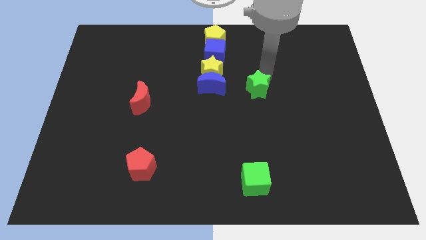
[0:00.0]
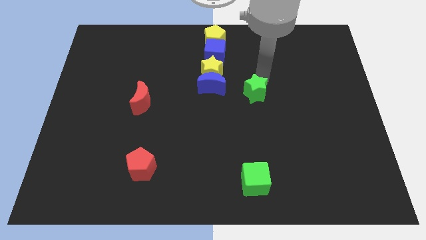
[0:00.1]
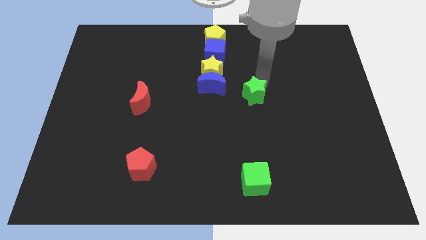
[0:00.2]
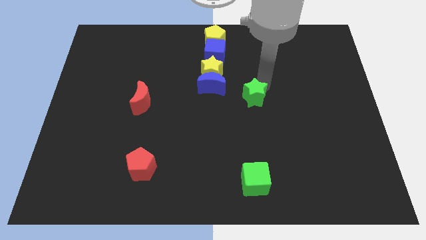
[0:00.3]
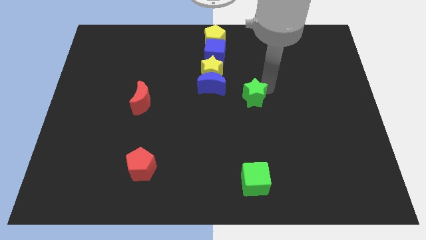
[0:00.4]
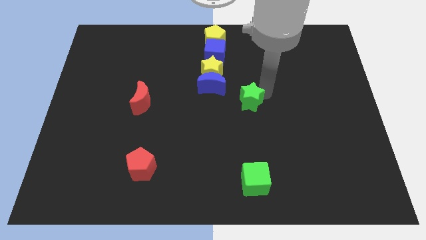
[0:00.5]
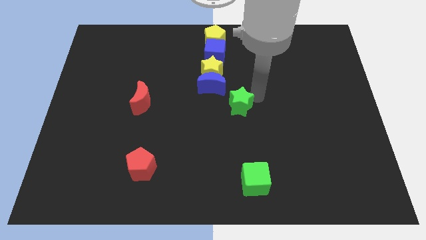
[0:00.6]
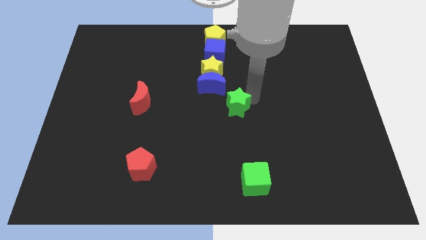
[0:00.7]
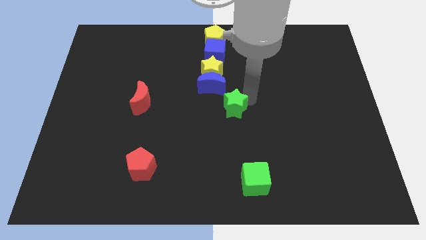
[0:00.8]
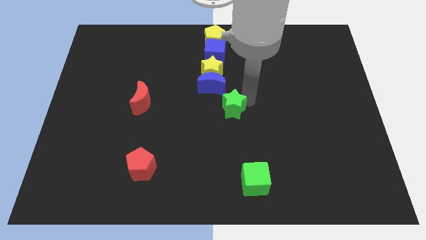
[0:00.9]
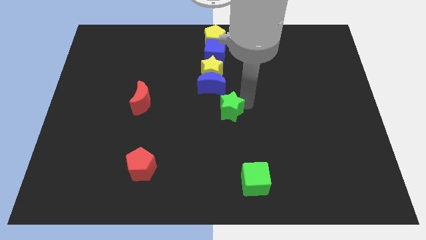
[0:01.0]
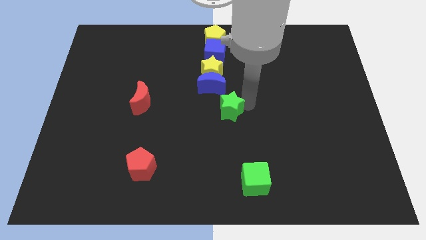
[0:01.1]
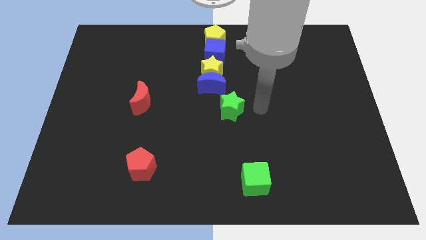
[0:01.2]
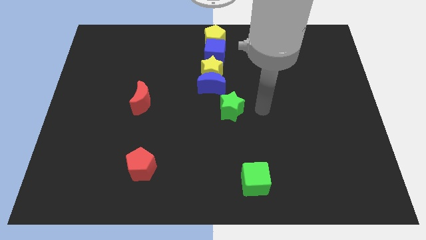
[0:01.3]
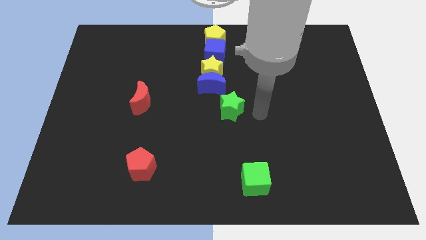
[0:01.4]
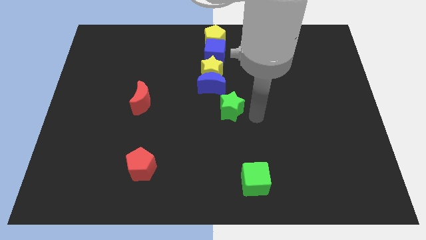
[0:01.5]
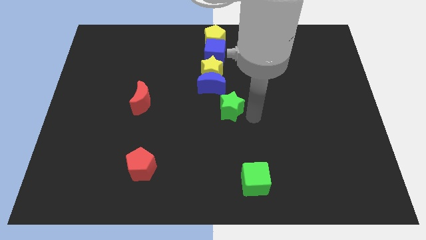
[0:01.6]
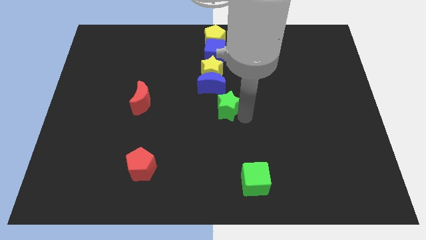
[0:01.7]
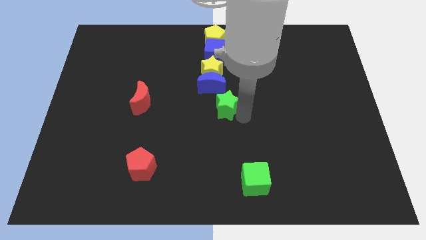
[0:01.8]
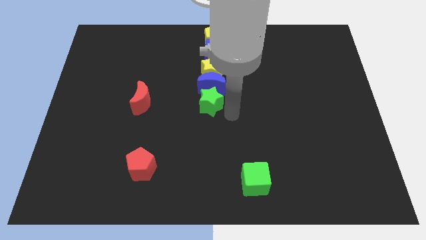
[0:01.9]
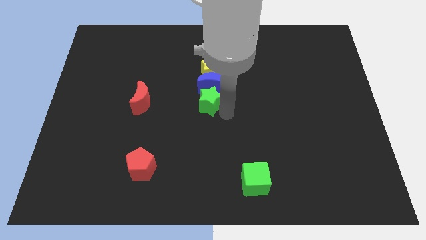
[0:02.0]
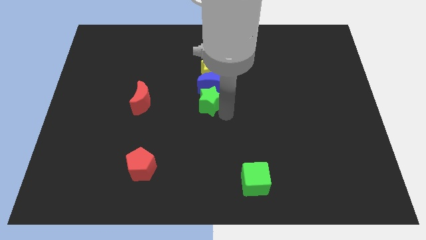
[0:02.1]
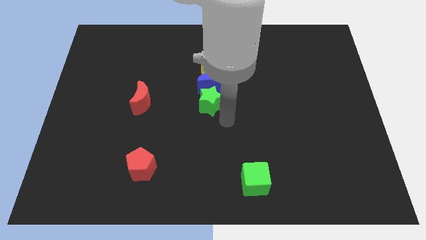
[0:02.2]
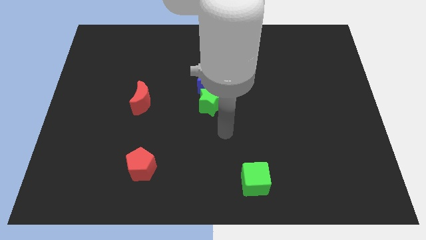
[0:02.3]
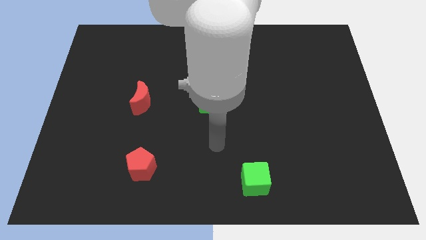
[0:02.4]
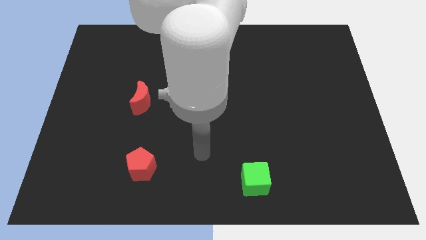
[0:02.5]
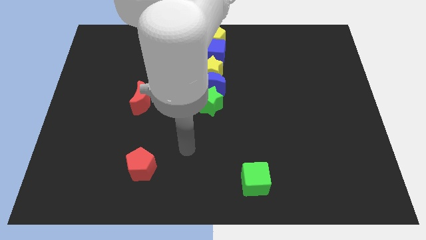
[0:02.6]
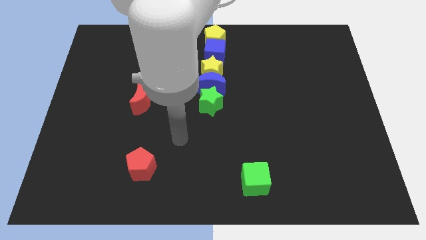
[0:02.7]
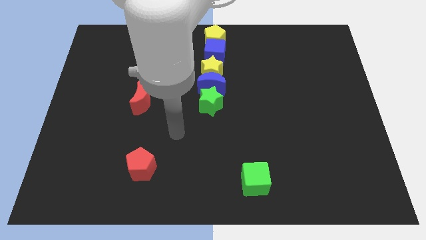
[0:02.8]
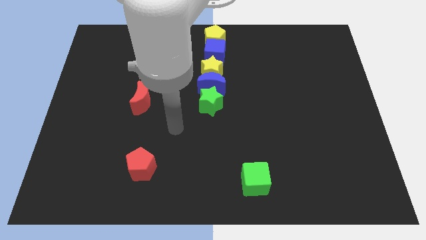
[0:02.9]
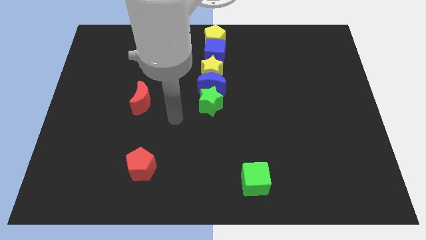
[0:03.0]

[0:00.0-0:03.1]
place the green star below the blue moon

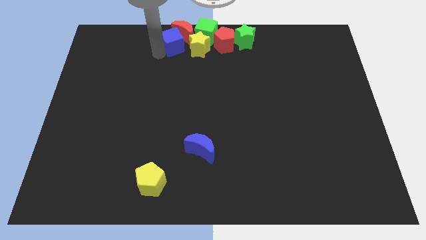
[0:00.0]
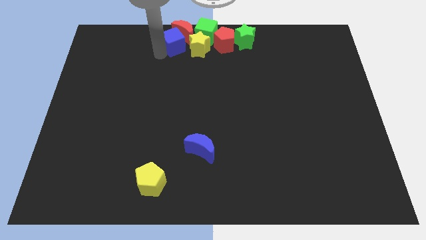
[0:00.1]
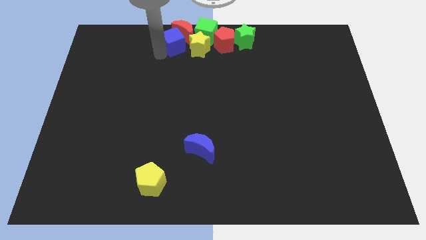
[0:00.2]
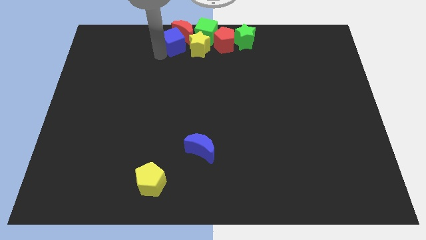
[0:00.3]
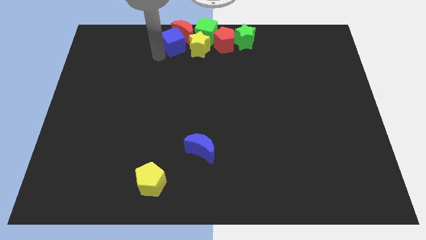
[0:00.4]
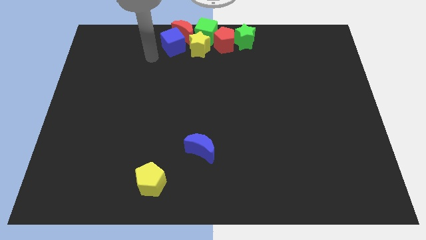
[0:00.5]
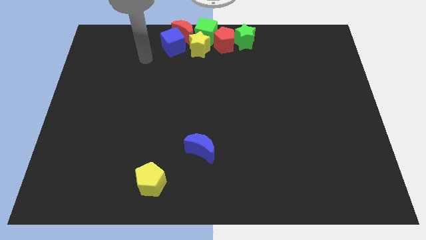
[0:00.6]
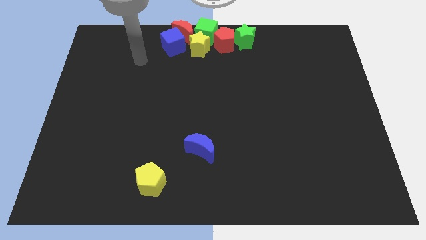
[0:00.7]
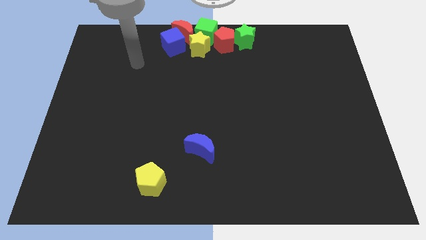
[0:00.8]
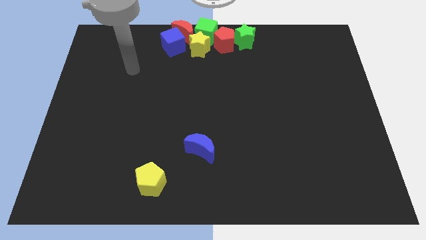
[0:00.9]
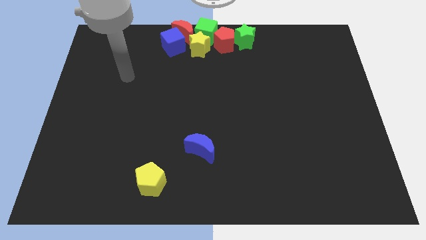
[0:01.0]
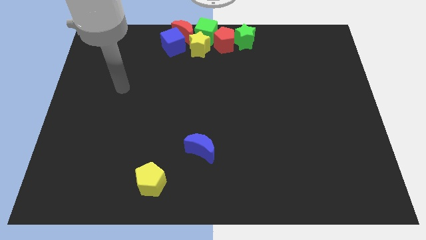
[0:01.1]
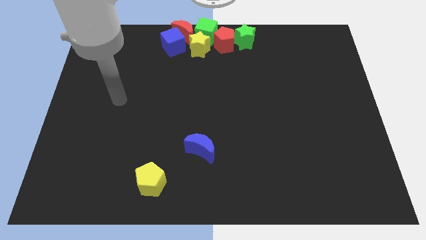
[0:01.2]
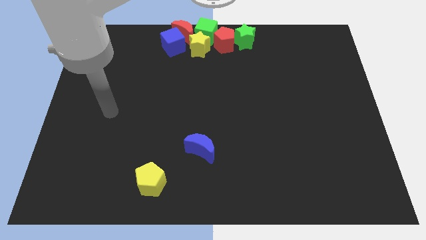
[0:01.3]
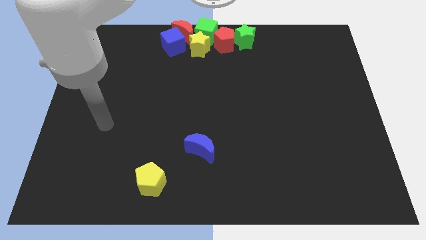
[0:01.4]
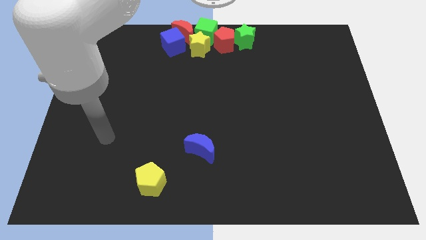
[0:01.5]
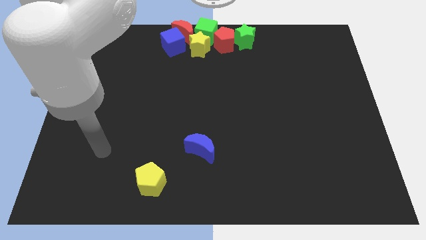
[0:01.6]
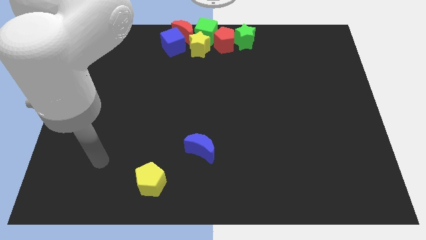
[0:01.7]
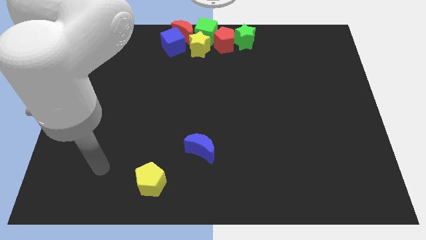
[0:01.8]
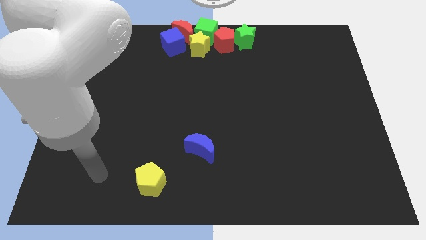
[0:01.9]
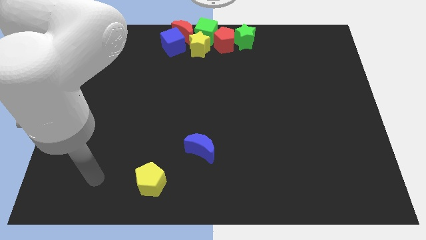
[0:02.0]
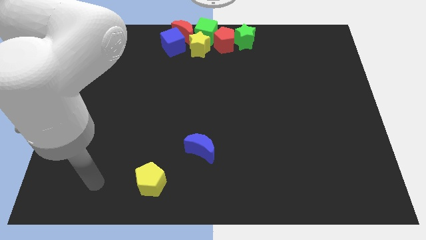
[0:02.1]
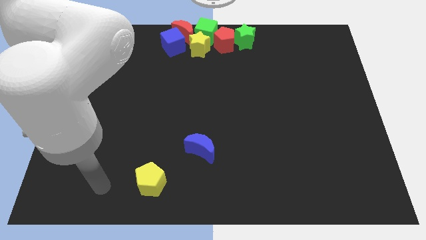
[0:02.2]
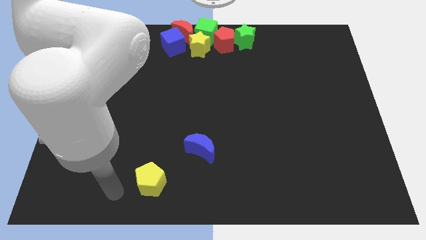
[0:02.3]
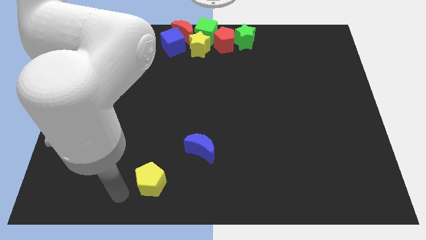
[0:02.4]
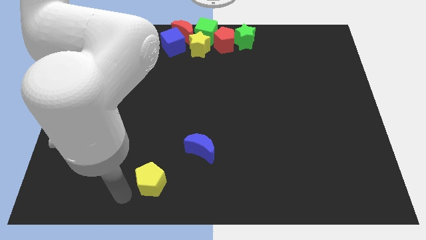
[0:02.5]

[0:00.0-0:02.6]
move your arm away from the blue cube

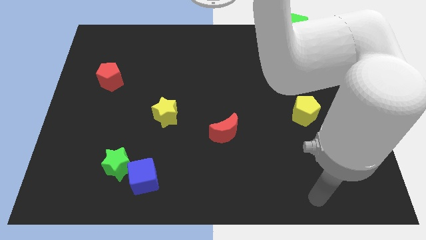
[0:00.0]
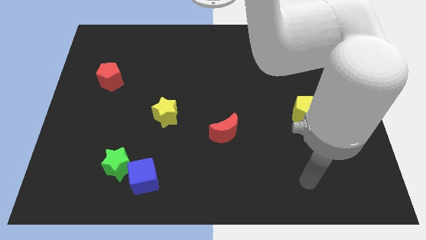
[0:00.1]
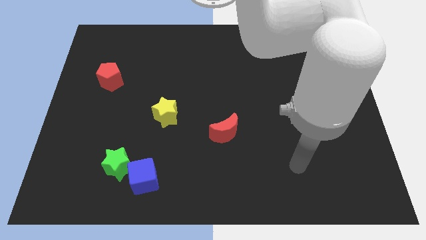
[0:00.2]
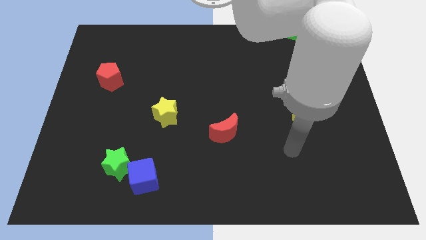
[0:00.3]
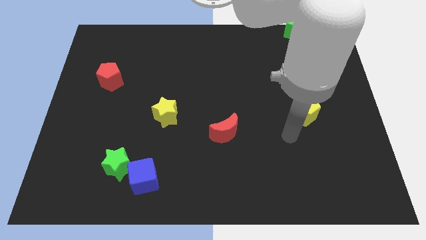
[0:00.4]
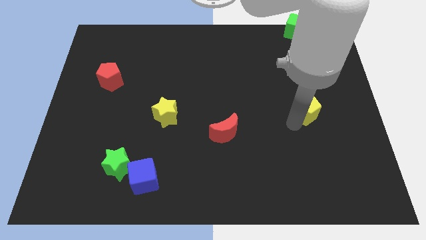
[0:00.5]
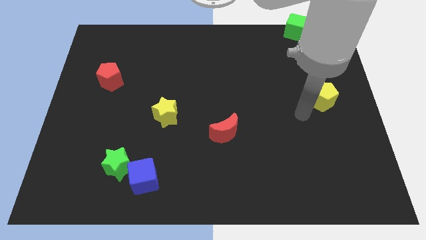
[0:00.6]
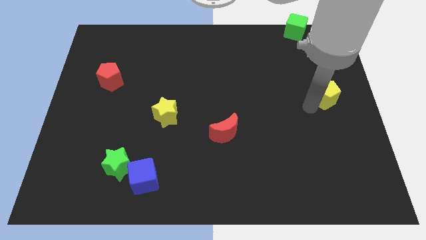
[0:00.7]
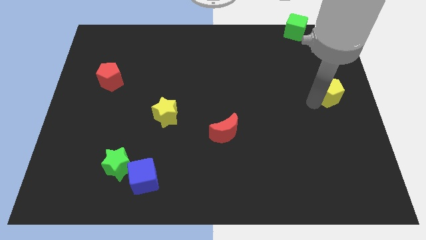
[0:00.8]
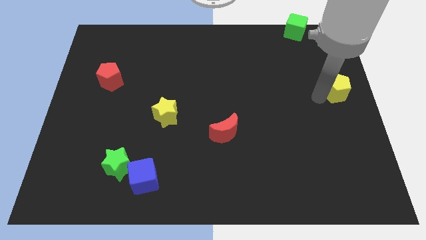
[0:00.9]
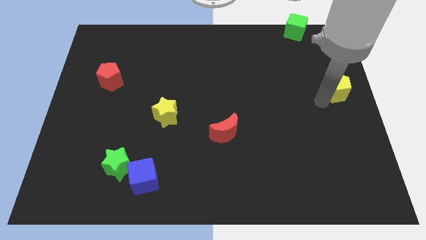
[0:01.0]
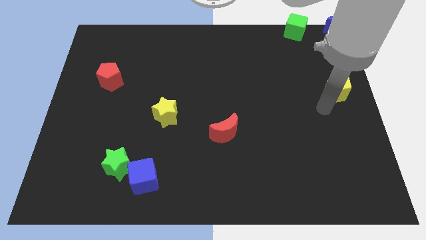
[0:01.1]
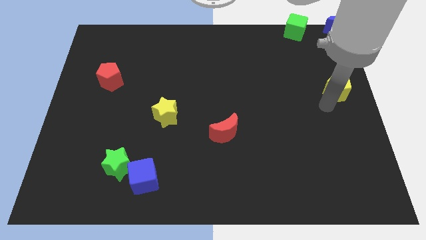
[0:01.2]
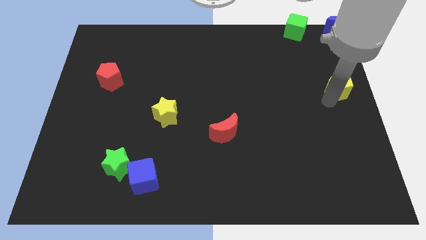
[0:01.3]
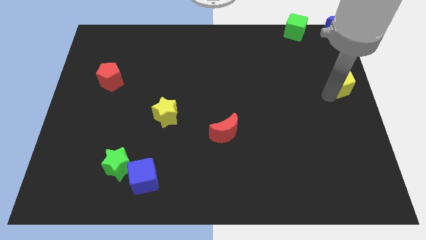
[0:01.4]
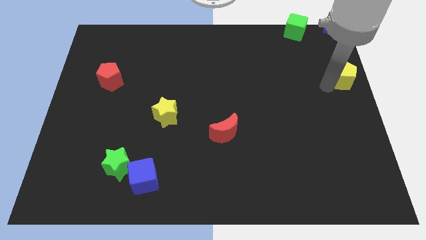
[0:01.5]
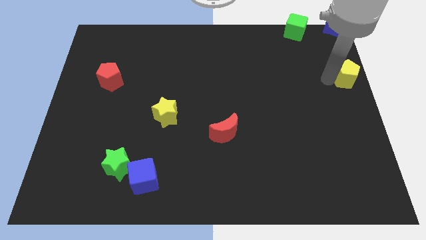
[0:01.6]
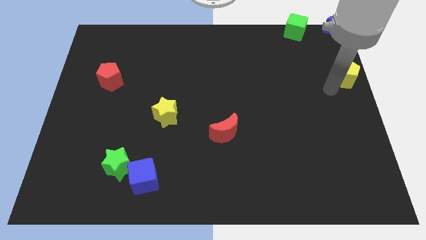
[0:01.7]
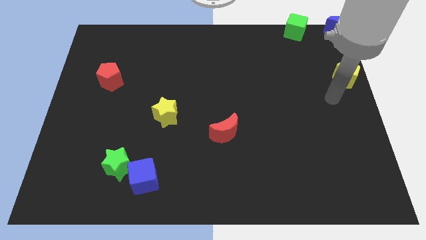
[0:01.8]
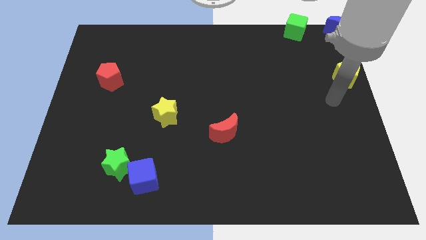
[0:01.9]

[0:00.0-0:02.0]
place the yellow pentagon below the blue moon

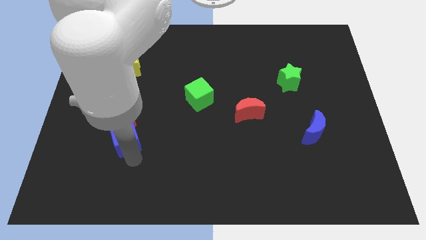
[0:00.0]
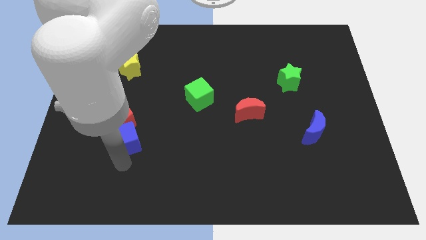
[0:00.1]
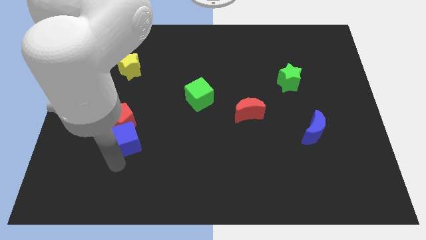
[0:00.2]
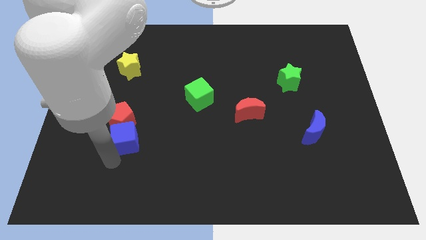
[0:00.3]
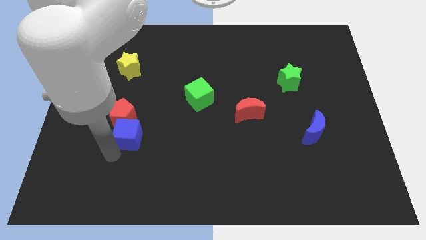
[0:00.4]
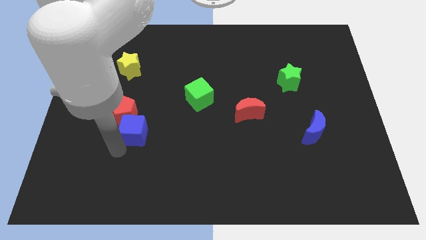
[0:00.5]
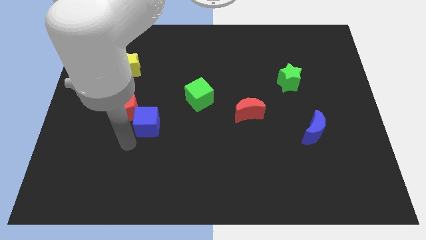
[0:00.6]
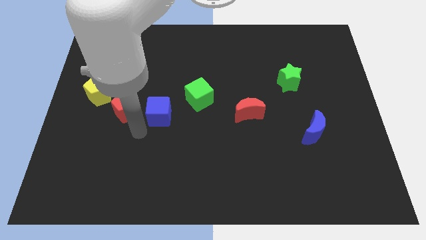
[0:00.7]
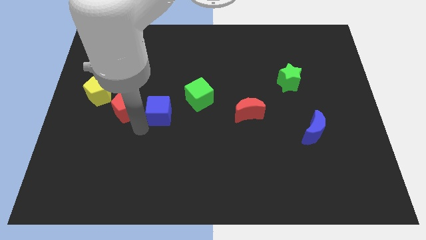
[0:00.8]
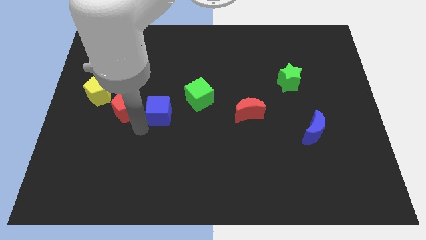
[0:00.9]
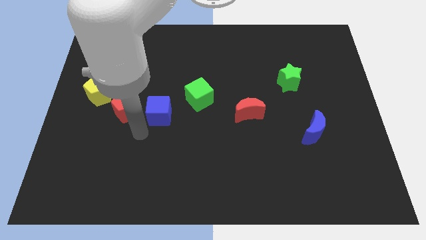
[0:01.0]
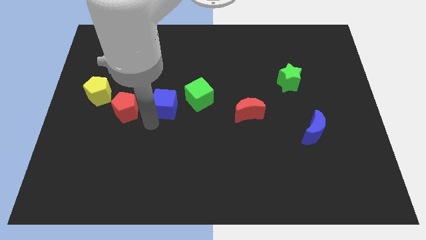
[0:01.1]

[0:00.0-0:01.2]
put the blue cube to the right side of red pentagon
